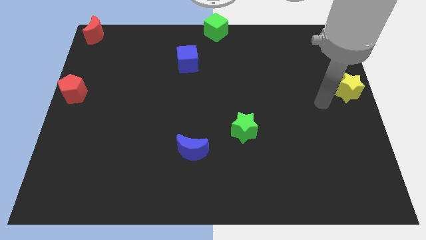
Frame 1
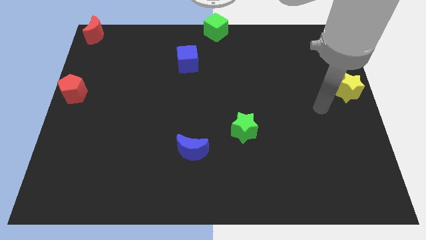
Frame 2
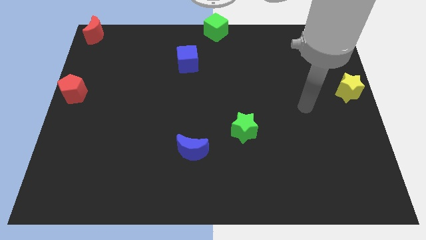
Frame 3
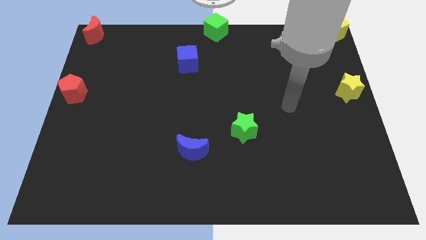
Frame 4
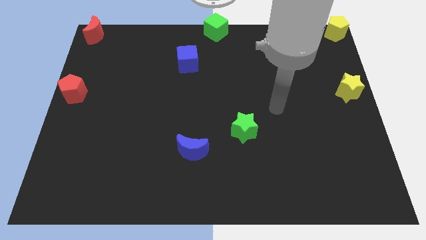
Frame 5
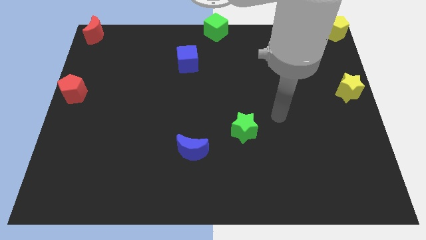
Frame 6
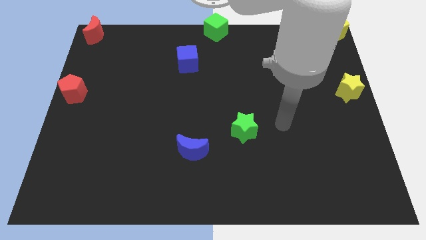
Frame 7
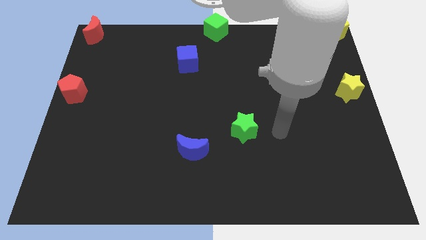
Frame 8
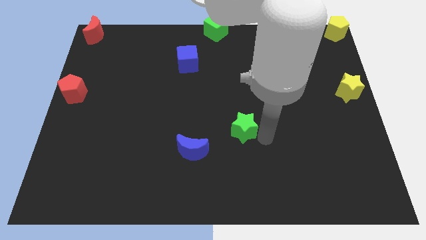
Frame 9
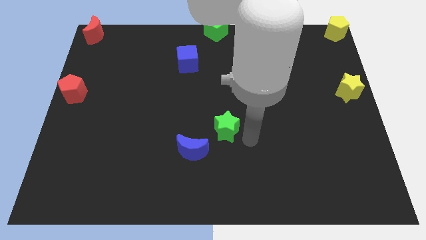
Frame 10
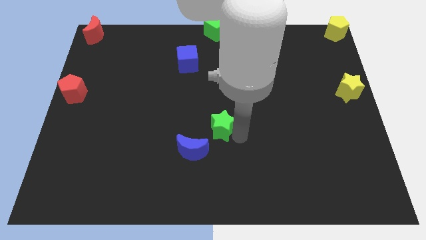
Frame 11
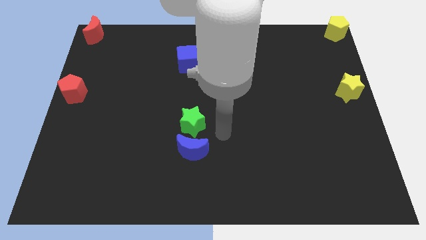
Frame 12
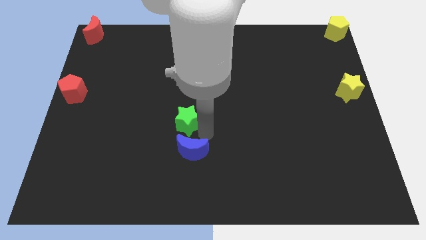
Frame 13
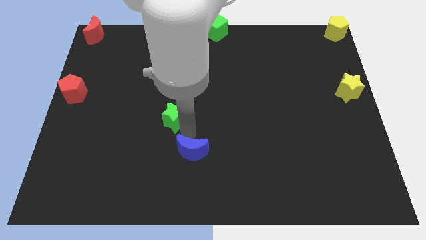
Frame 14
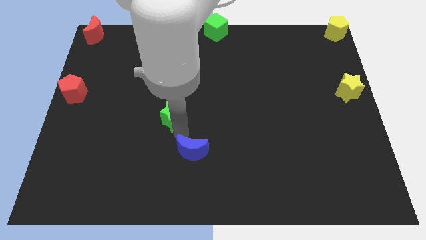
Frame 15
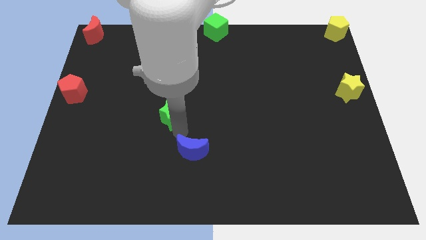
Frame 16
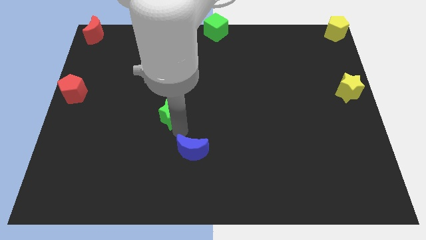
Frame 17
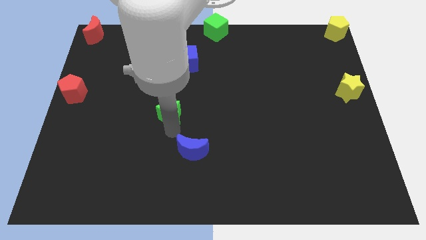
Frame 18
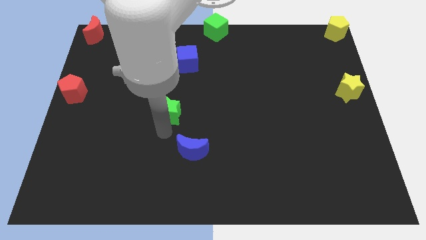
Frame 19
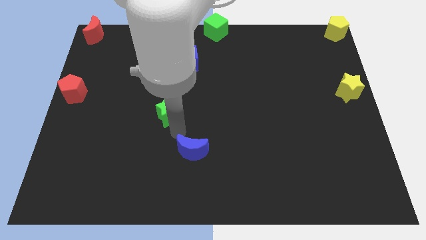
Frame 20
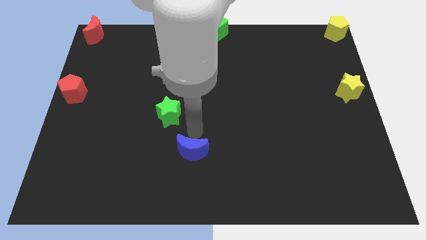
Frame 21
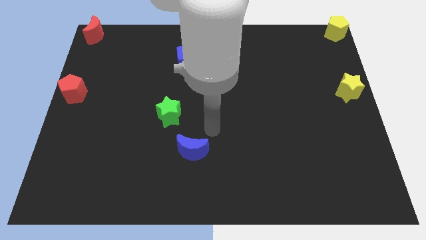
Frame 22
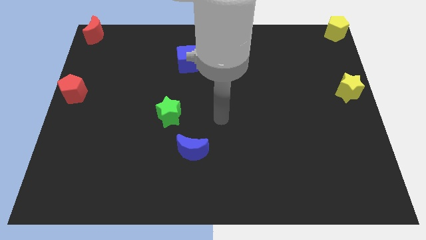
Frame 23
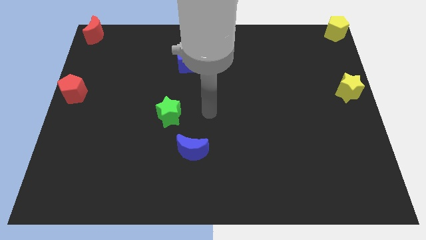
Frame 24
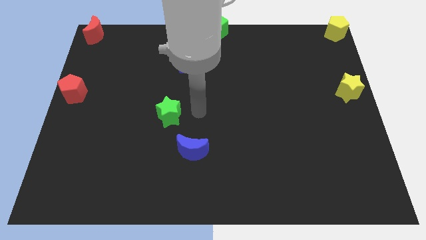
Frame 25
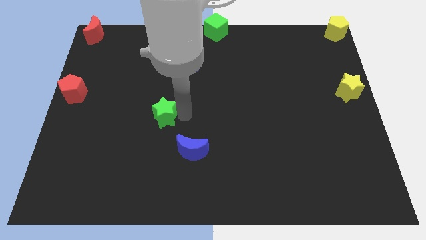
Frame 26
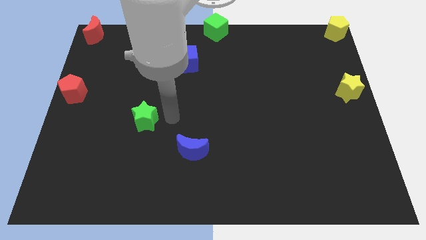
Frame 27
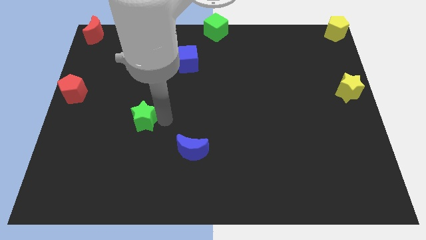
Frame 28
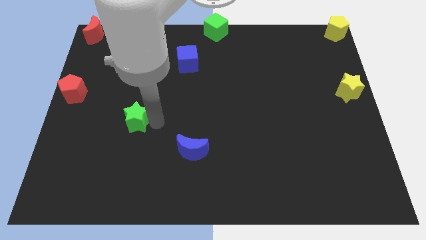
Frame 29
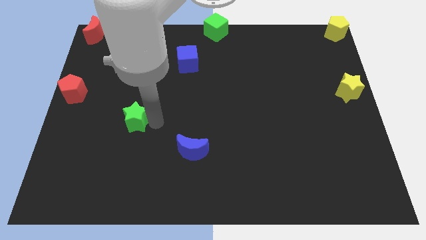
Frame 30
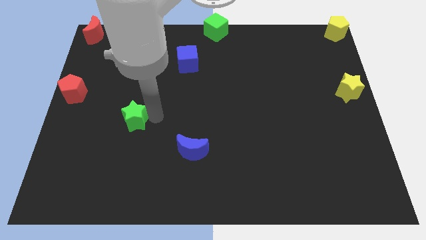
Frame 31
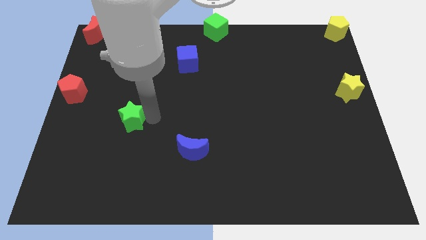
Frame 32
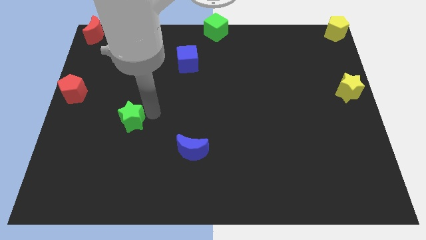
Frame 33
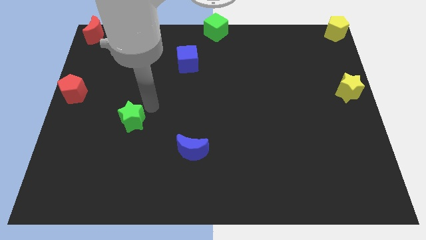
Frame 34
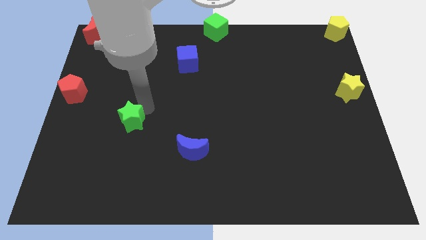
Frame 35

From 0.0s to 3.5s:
push the green star diagonally in between the red pentagon and the blue moon

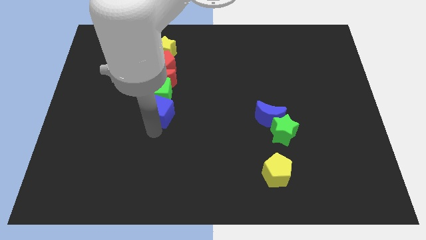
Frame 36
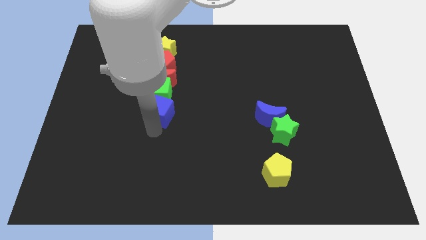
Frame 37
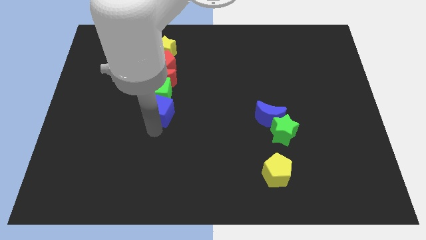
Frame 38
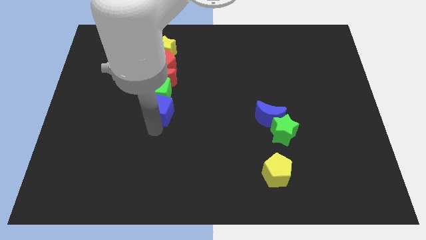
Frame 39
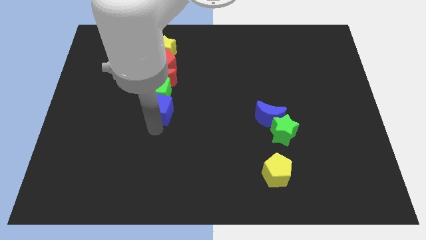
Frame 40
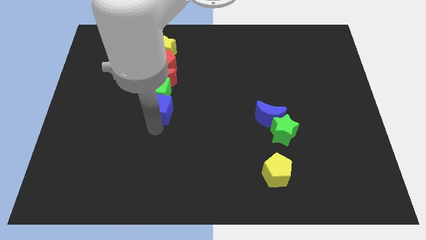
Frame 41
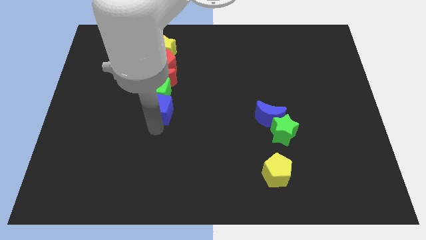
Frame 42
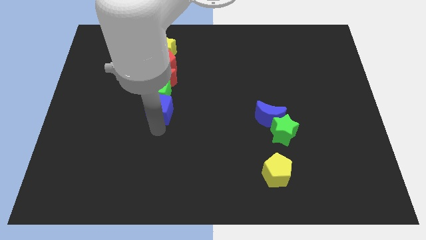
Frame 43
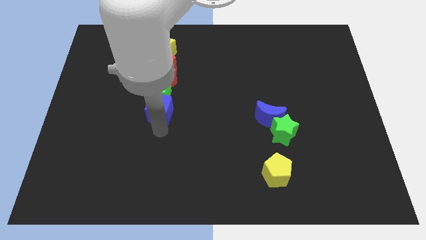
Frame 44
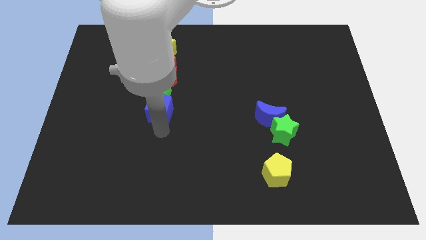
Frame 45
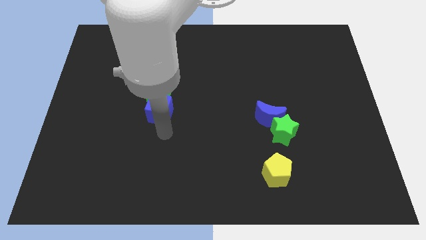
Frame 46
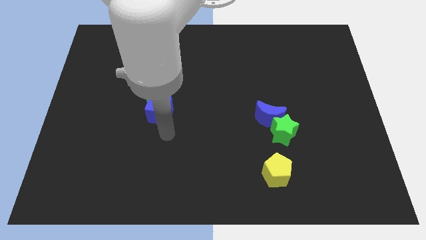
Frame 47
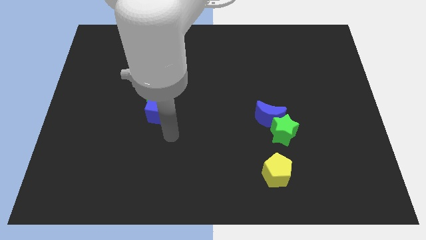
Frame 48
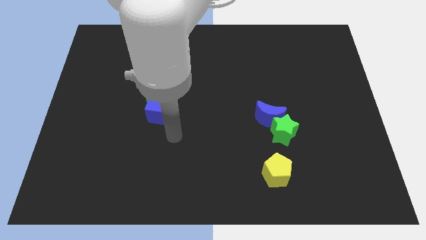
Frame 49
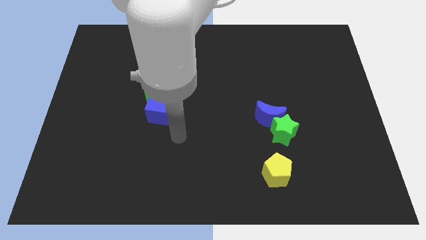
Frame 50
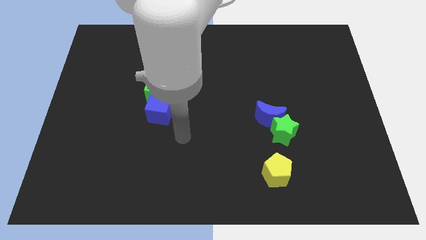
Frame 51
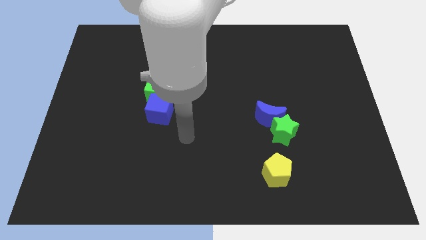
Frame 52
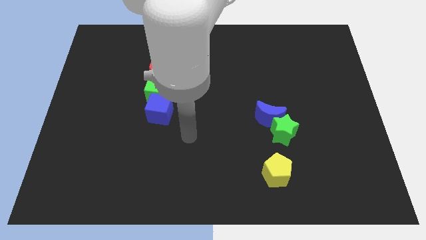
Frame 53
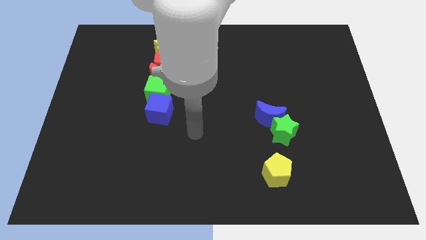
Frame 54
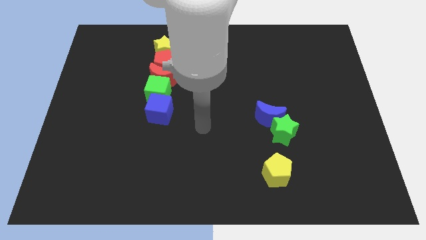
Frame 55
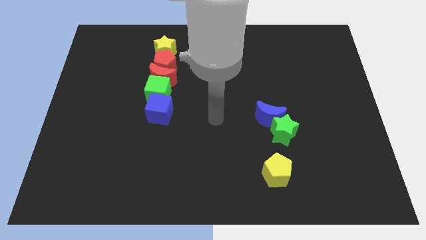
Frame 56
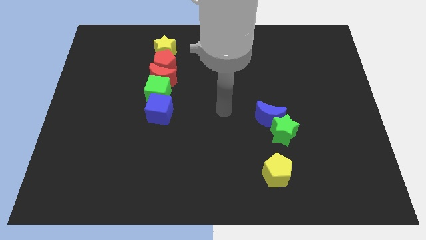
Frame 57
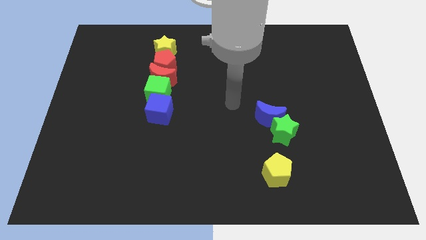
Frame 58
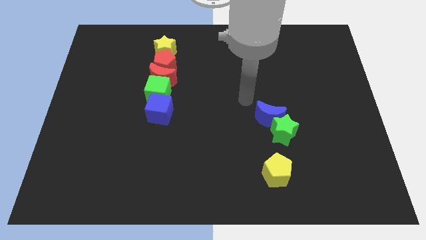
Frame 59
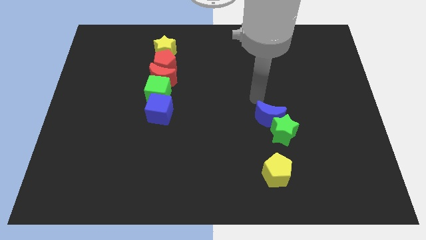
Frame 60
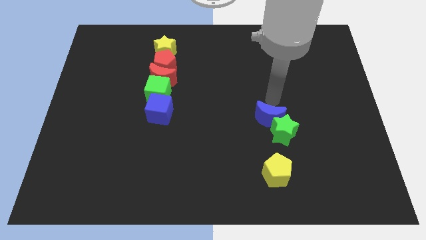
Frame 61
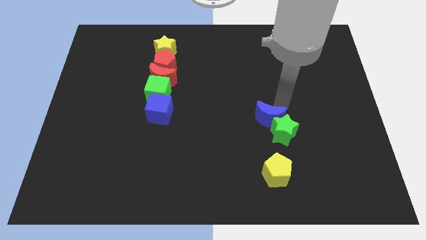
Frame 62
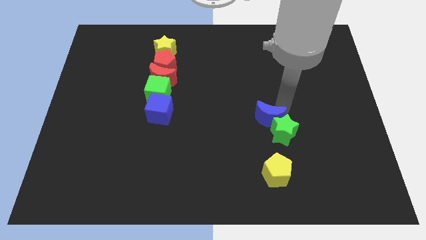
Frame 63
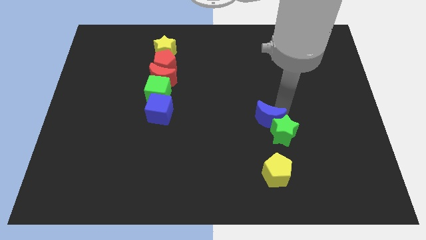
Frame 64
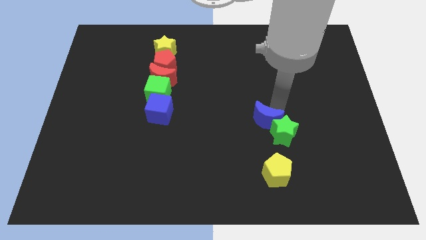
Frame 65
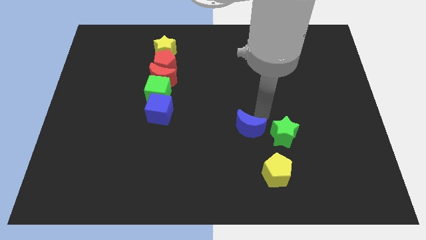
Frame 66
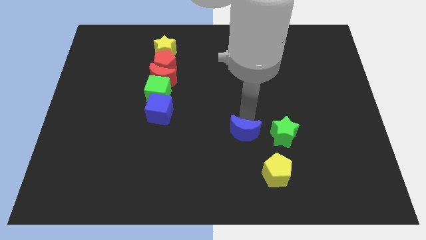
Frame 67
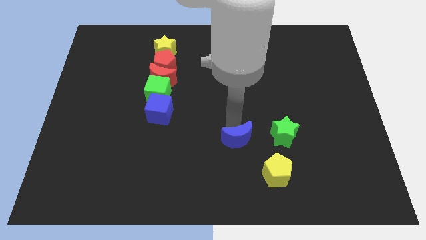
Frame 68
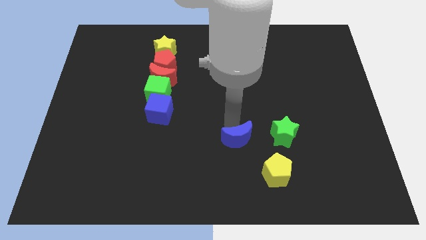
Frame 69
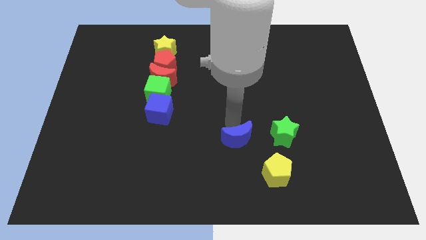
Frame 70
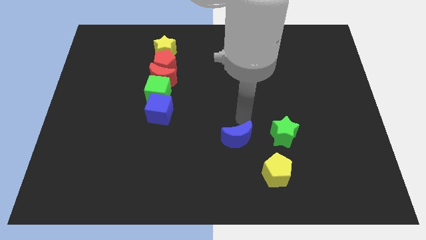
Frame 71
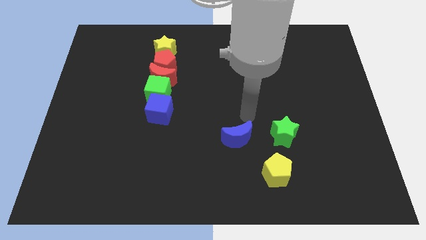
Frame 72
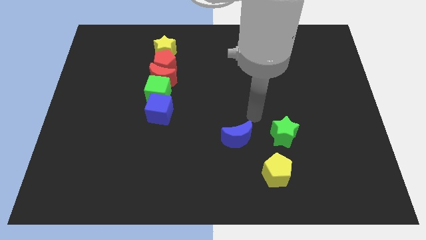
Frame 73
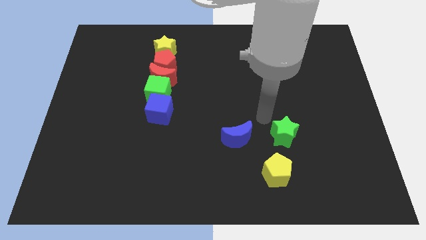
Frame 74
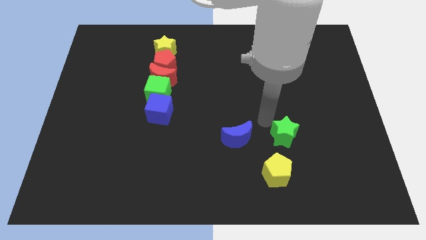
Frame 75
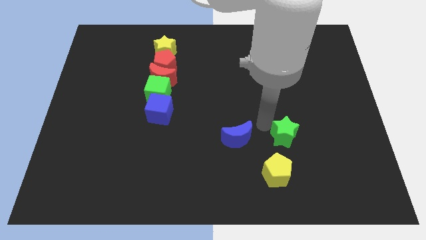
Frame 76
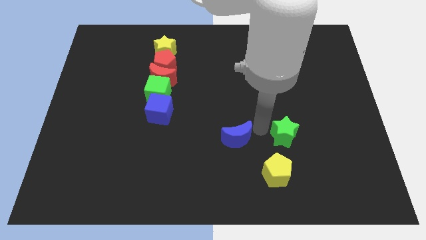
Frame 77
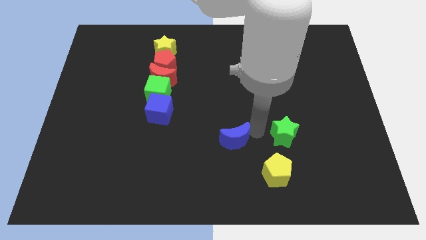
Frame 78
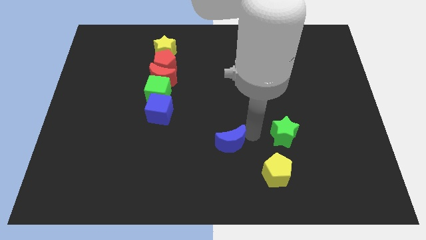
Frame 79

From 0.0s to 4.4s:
drag the blue moon diagonal to the yellow pentagon

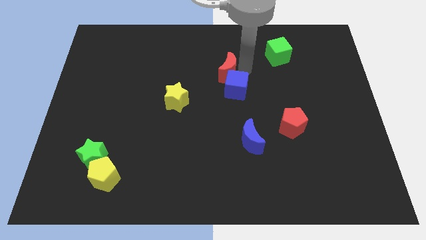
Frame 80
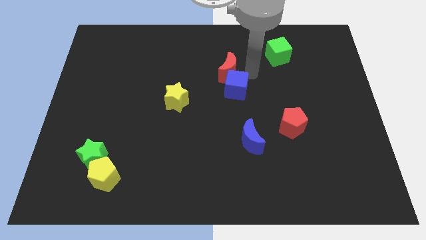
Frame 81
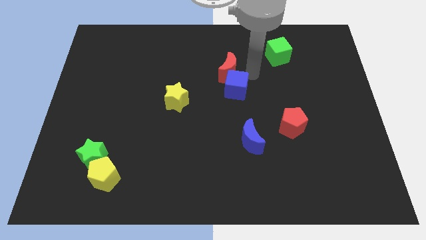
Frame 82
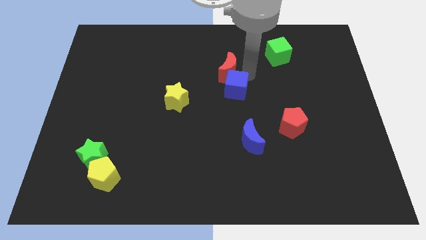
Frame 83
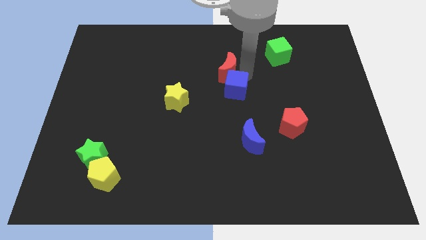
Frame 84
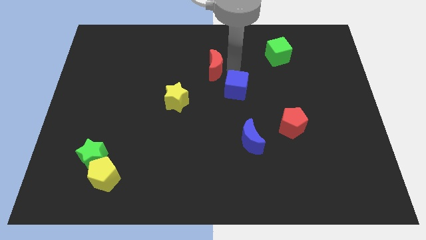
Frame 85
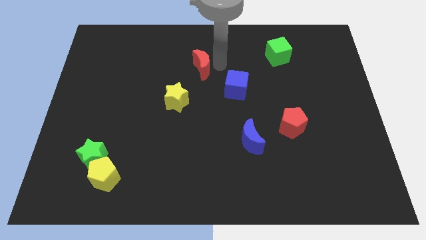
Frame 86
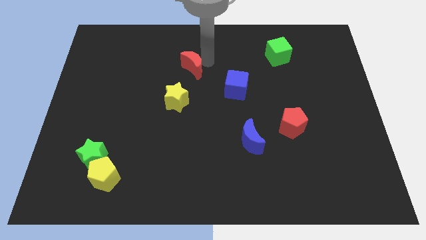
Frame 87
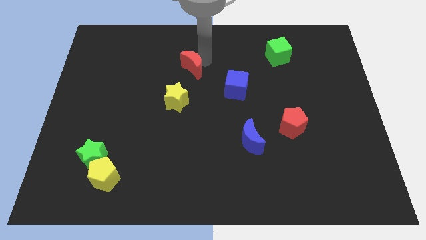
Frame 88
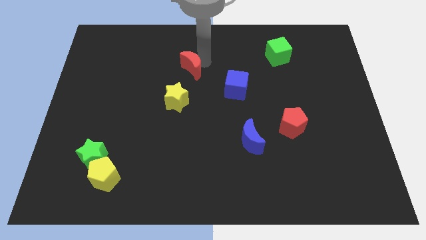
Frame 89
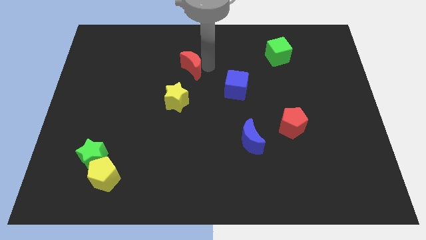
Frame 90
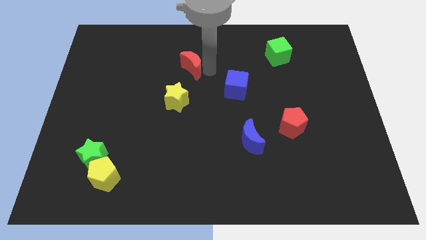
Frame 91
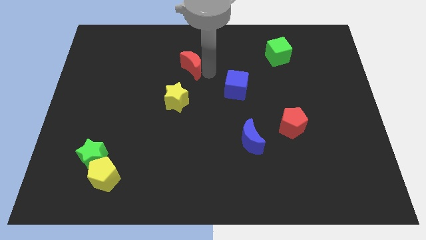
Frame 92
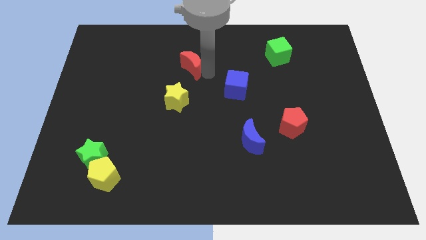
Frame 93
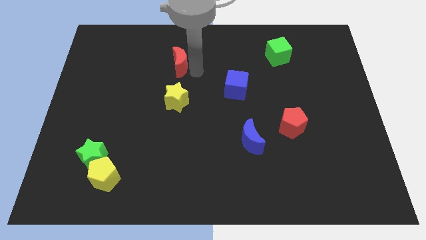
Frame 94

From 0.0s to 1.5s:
push the red moon above the yellow star
